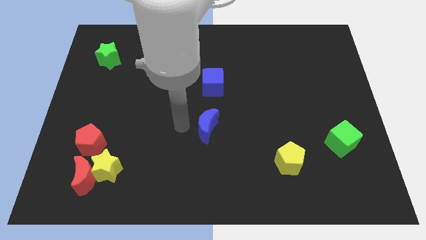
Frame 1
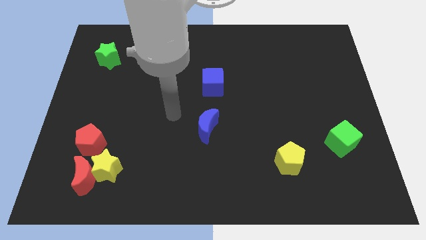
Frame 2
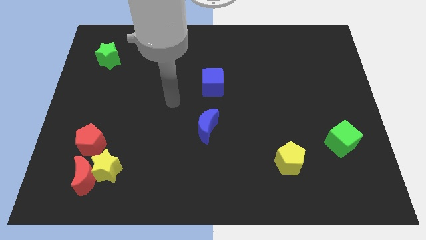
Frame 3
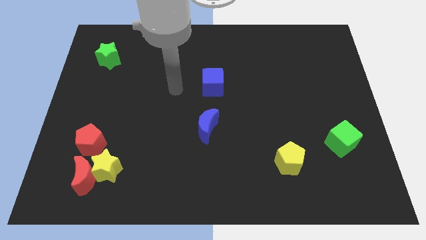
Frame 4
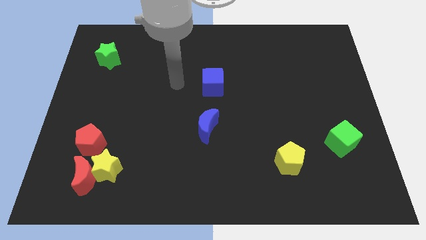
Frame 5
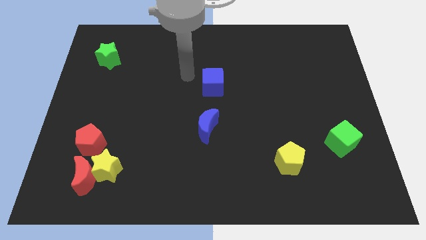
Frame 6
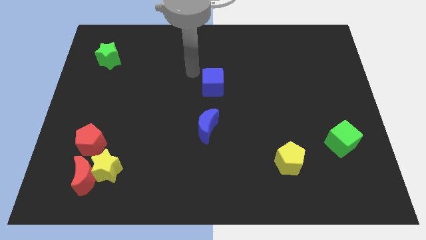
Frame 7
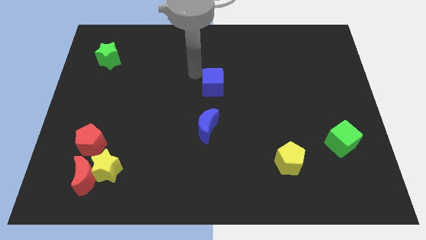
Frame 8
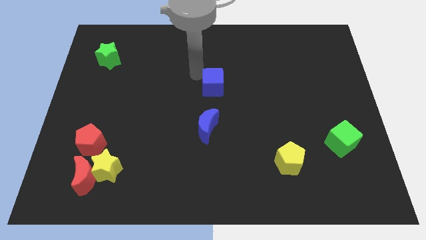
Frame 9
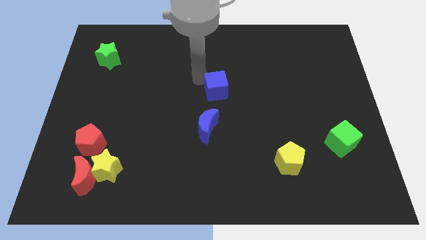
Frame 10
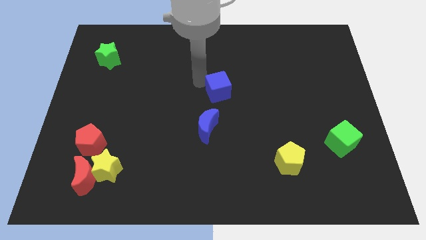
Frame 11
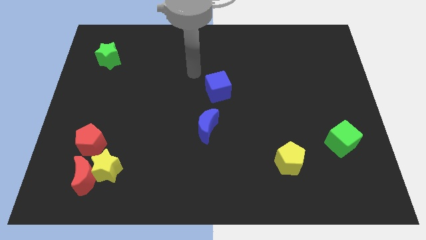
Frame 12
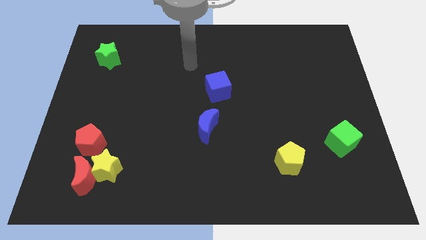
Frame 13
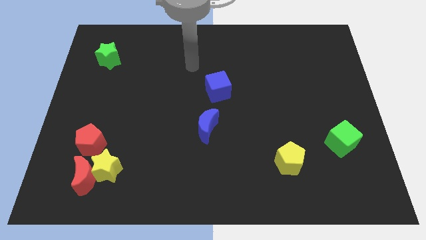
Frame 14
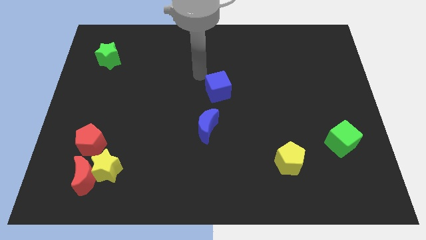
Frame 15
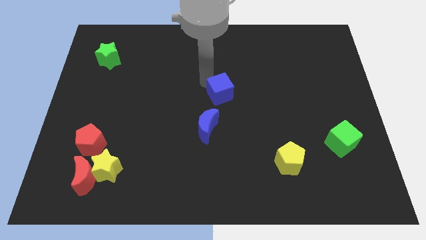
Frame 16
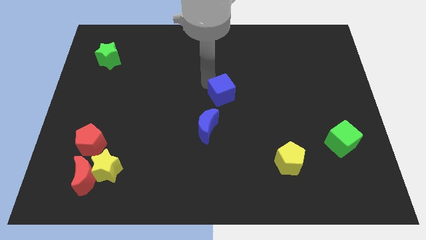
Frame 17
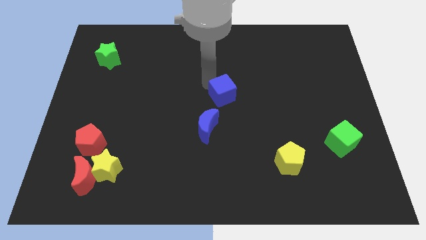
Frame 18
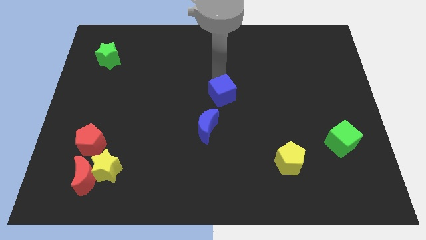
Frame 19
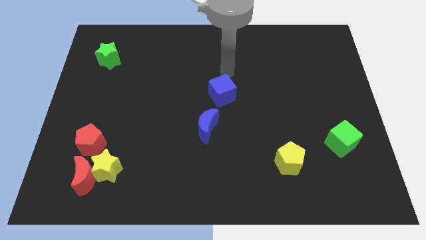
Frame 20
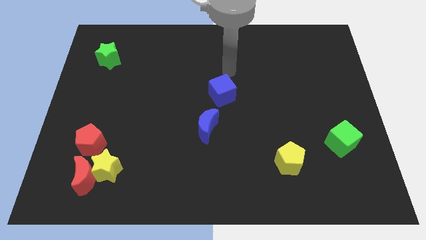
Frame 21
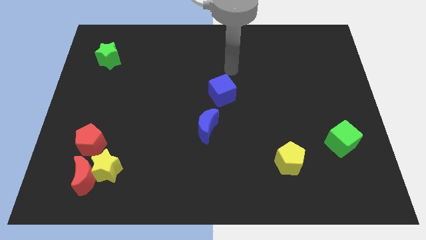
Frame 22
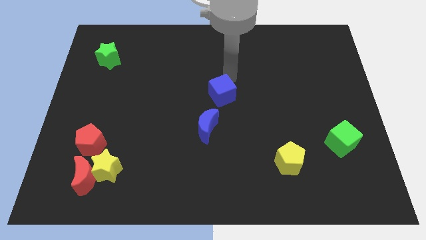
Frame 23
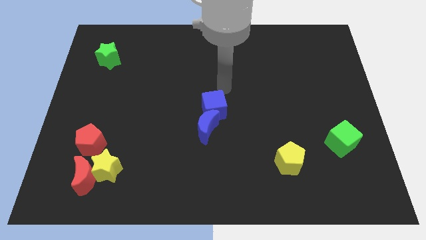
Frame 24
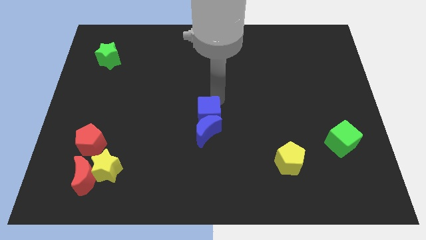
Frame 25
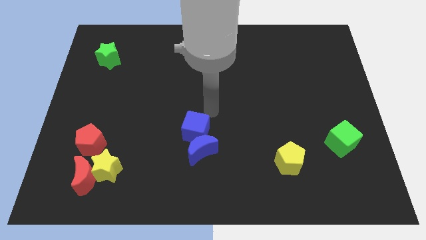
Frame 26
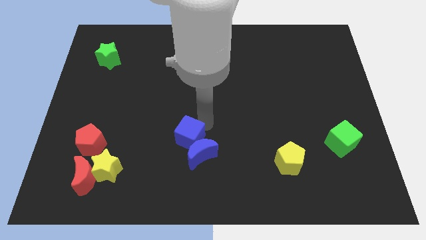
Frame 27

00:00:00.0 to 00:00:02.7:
push the blue cube into the blue crescent

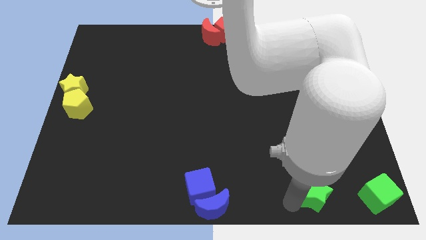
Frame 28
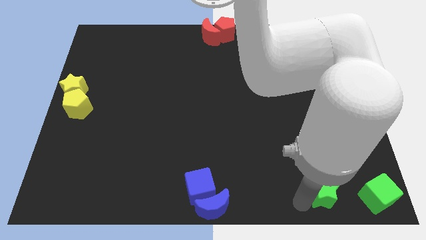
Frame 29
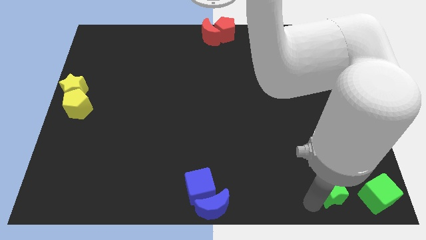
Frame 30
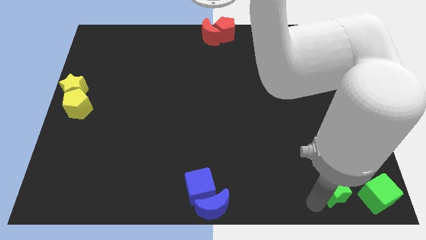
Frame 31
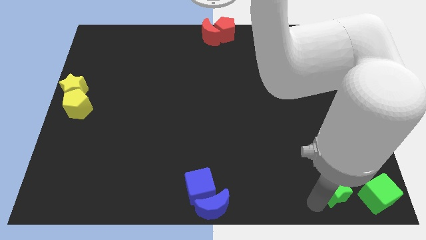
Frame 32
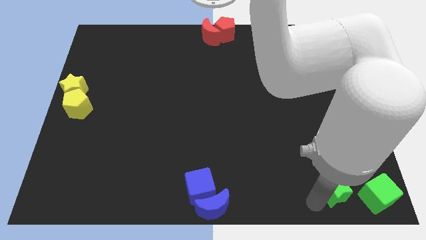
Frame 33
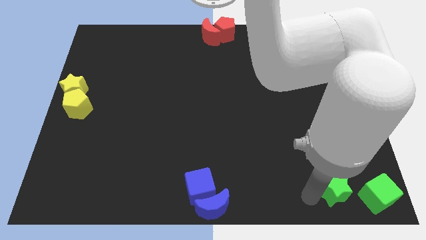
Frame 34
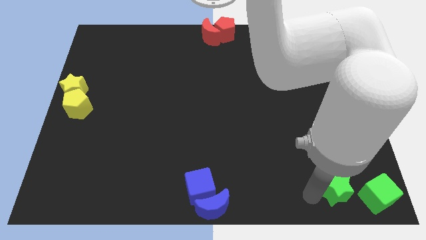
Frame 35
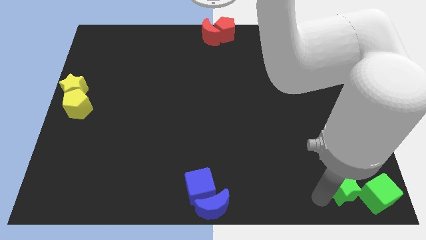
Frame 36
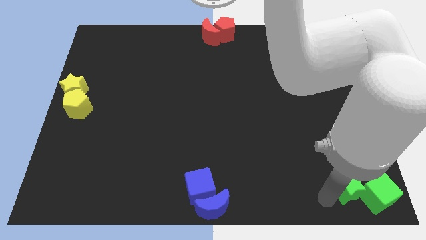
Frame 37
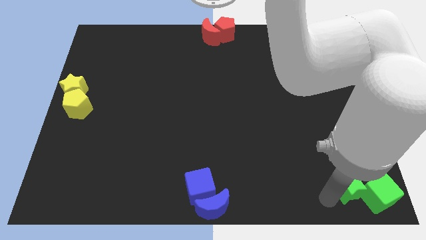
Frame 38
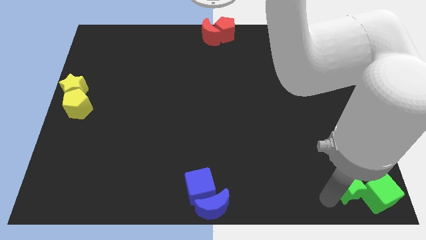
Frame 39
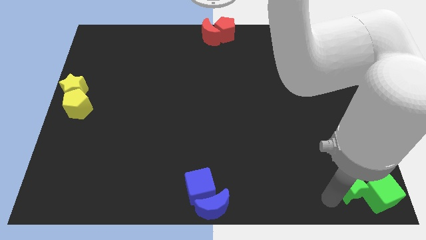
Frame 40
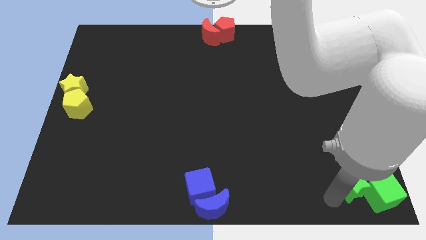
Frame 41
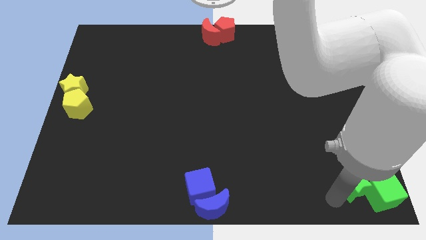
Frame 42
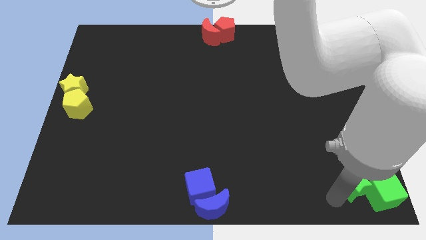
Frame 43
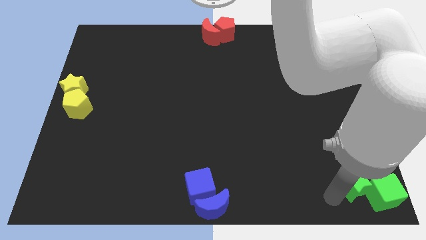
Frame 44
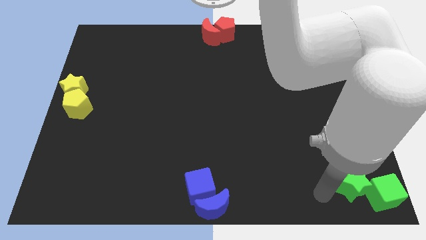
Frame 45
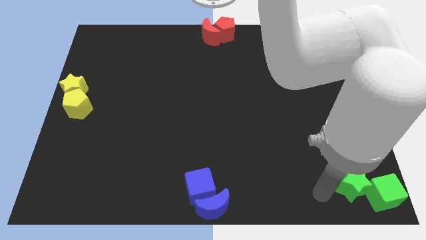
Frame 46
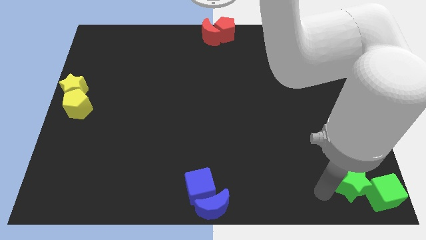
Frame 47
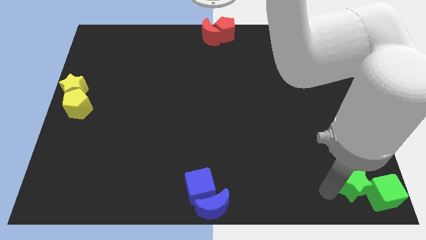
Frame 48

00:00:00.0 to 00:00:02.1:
group up the green blocks at the bottom right corner

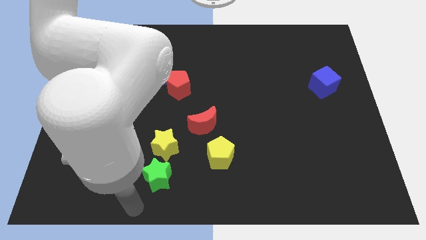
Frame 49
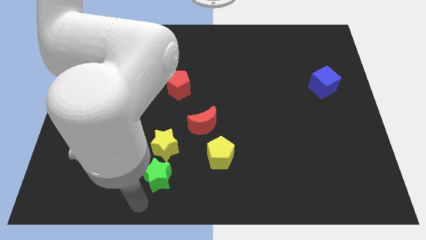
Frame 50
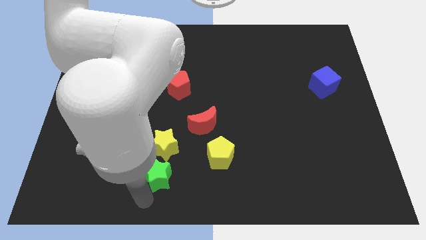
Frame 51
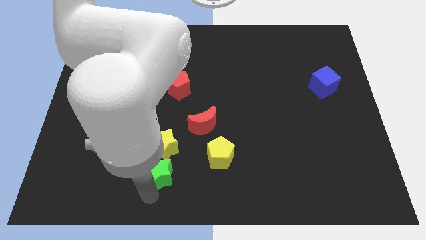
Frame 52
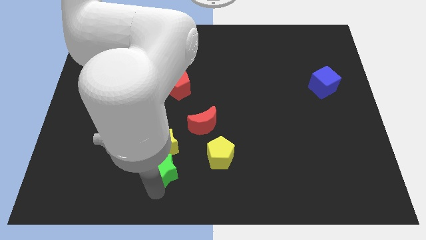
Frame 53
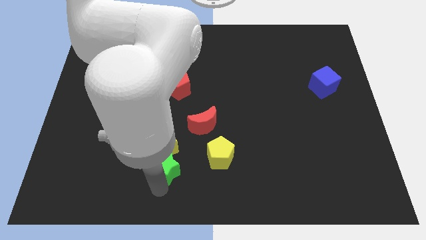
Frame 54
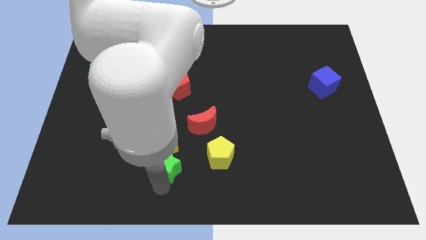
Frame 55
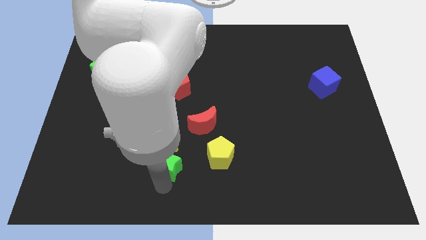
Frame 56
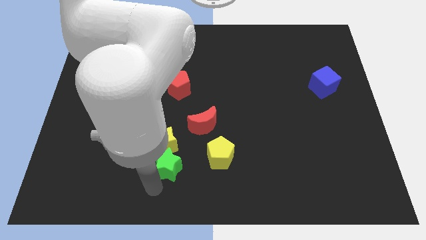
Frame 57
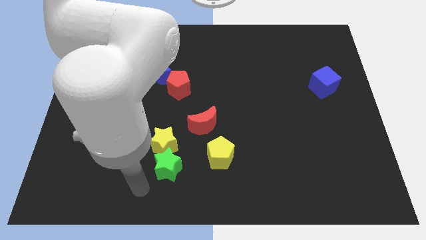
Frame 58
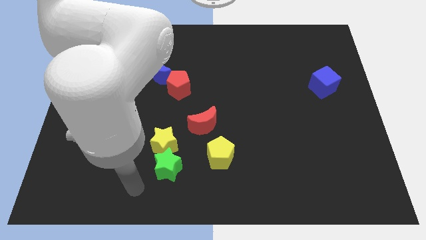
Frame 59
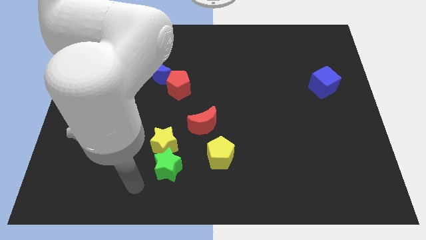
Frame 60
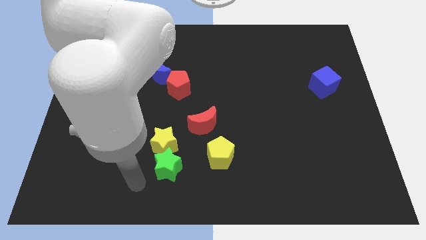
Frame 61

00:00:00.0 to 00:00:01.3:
move the green star close to the yellow star

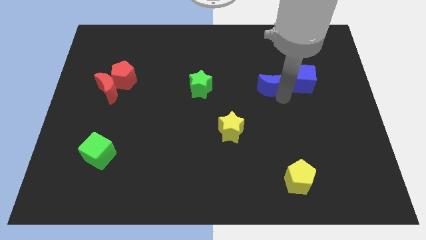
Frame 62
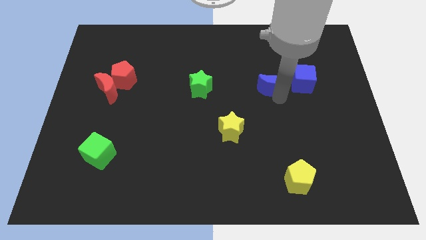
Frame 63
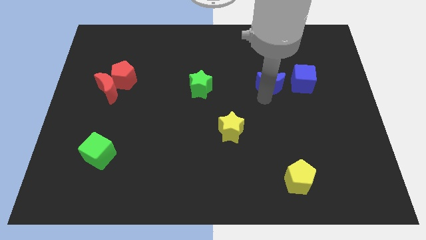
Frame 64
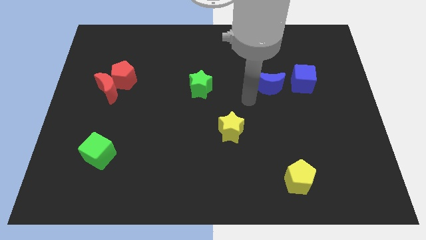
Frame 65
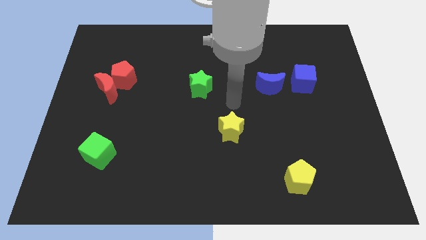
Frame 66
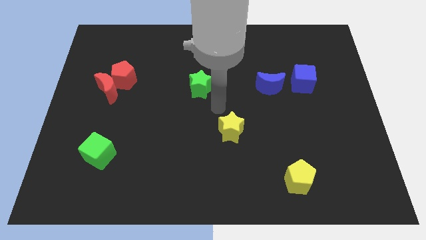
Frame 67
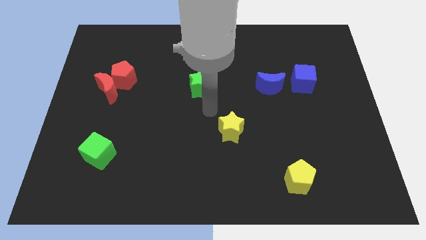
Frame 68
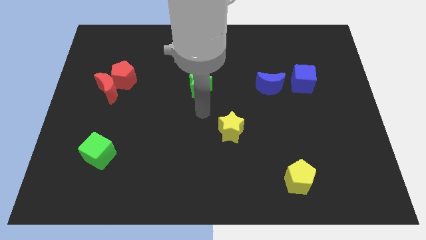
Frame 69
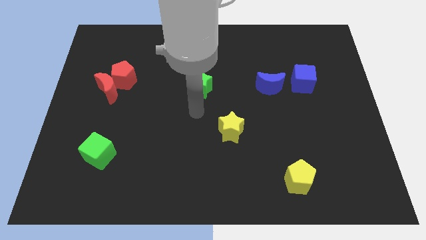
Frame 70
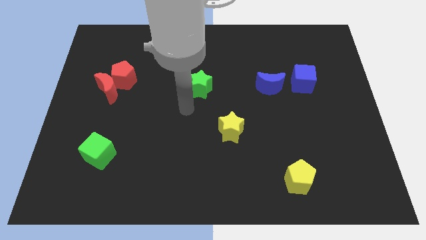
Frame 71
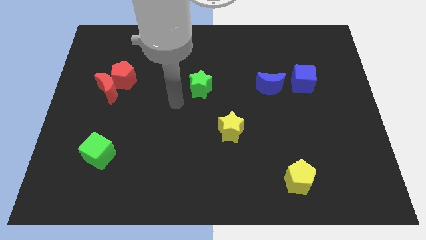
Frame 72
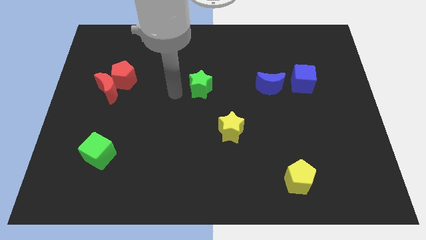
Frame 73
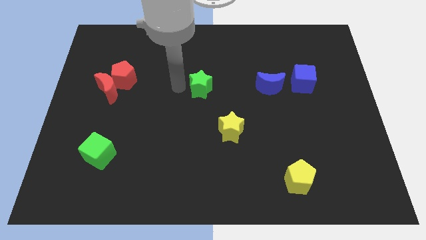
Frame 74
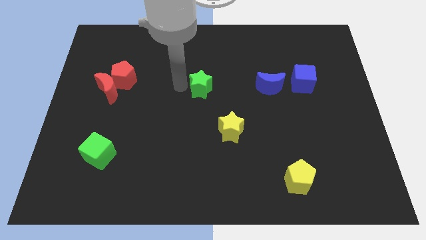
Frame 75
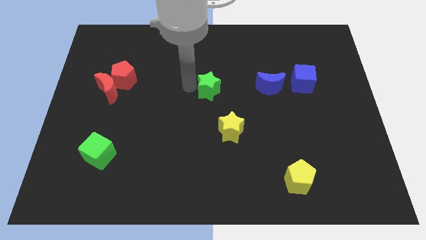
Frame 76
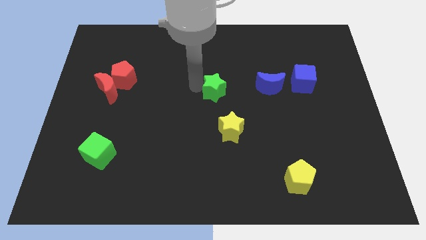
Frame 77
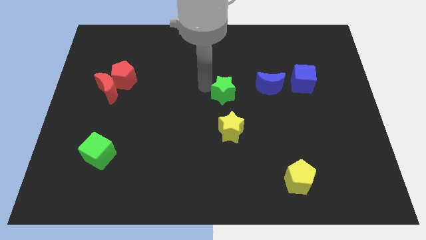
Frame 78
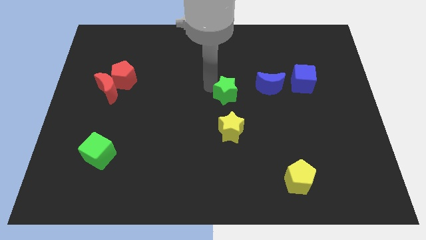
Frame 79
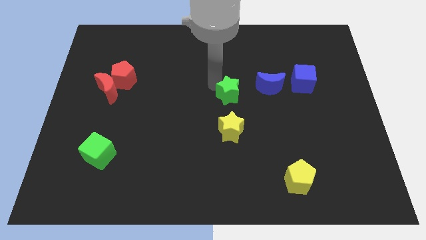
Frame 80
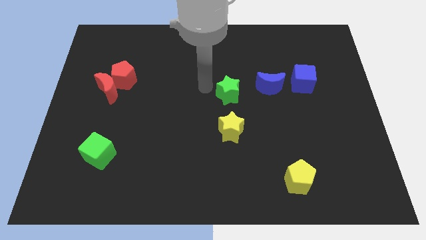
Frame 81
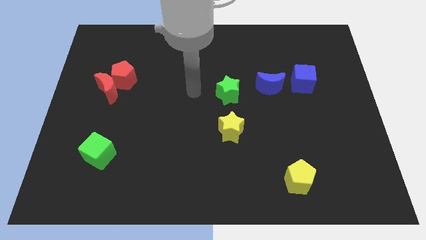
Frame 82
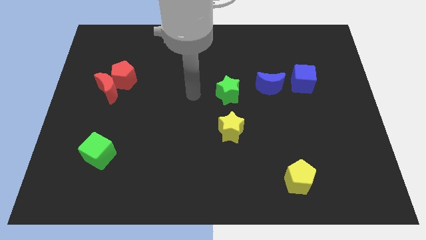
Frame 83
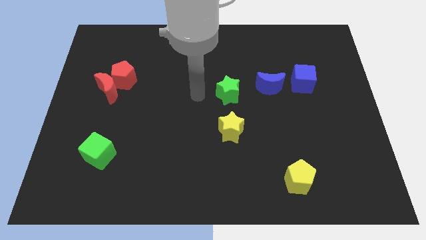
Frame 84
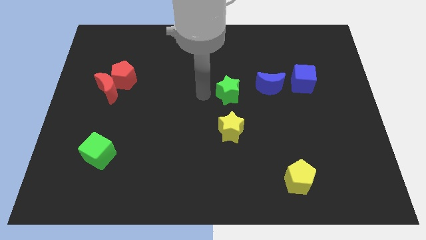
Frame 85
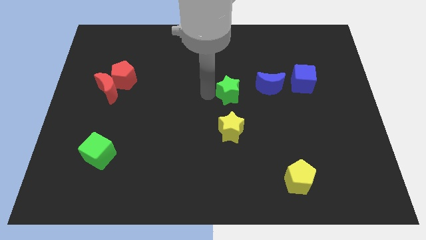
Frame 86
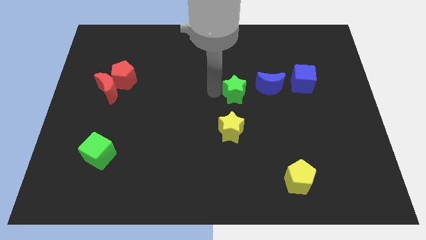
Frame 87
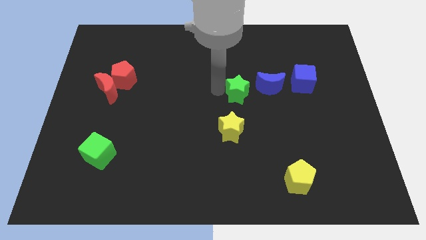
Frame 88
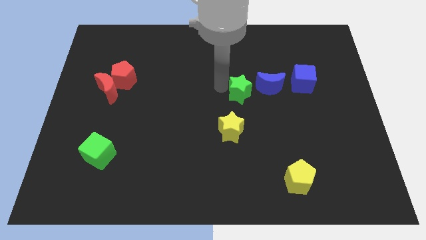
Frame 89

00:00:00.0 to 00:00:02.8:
move green star to the left of blue moon

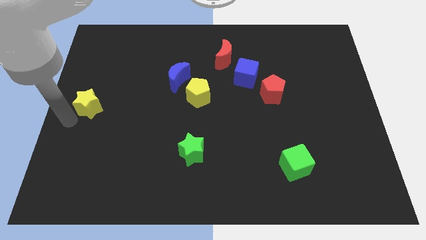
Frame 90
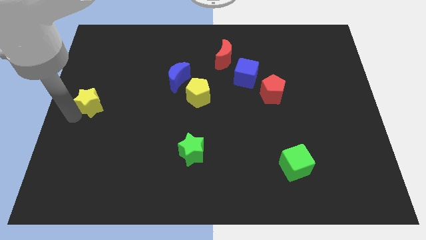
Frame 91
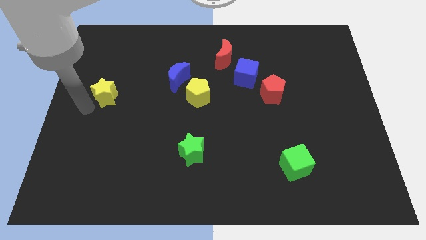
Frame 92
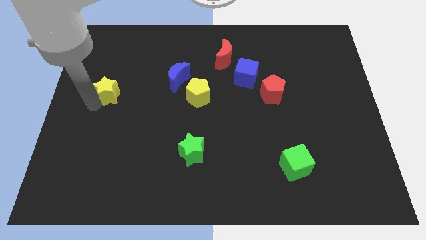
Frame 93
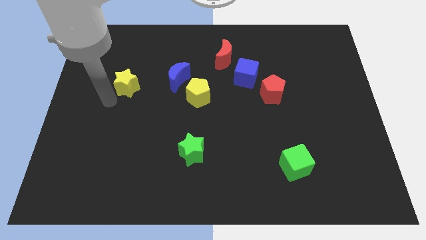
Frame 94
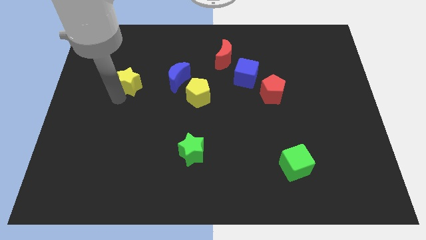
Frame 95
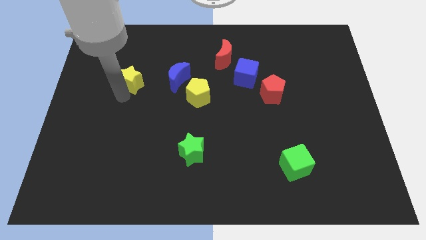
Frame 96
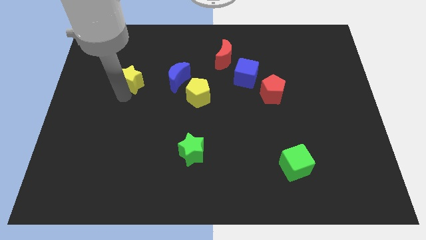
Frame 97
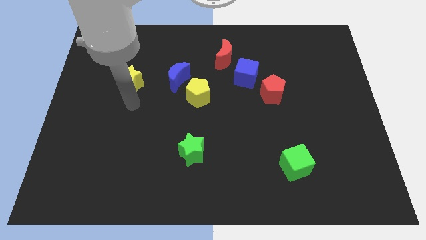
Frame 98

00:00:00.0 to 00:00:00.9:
push the yellow star towards the left to the blue crescent
